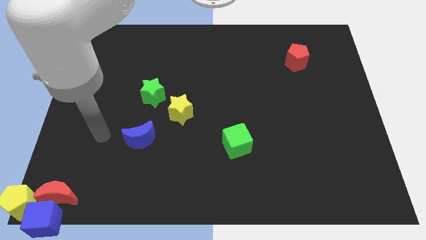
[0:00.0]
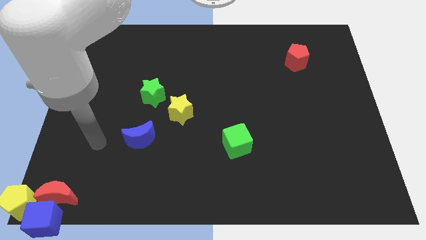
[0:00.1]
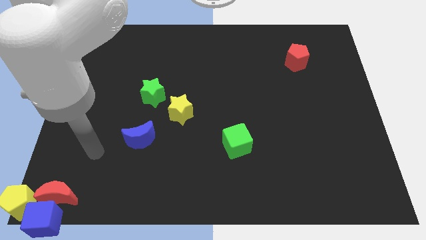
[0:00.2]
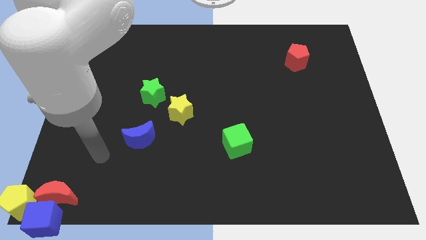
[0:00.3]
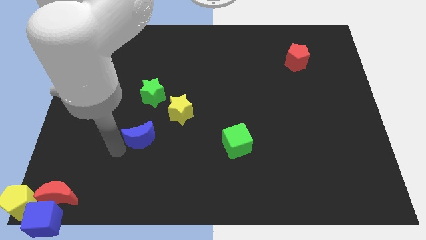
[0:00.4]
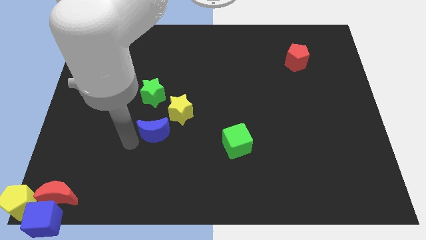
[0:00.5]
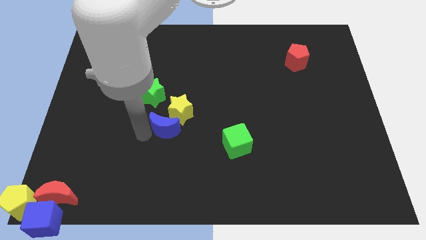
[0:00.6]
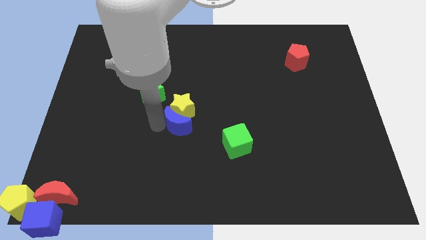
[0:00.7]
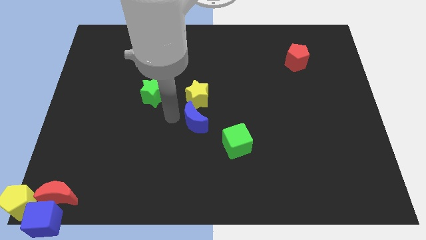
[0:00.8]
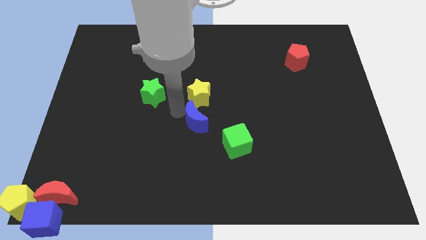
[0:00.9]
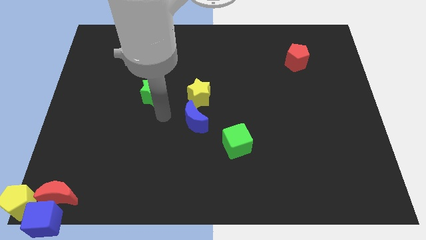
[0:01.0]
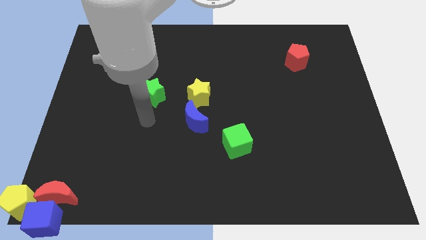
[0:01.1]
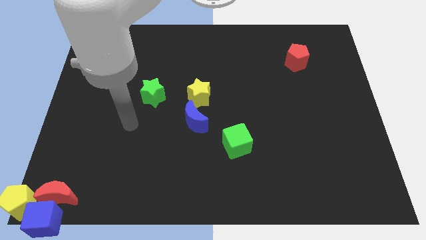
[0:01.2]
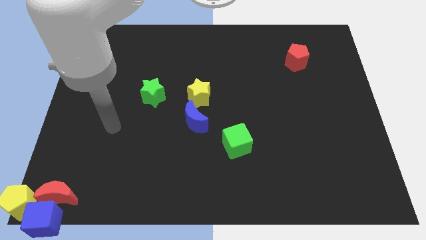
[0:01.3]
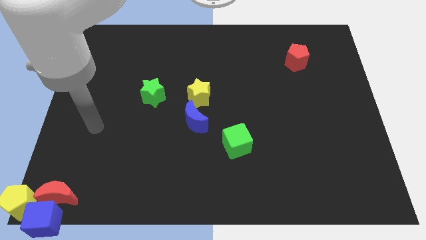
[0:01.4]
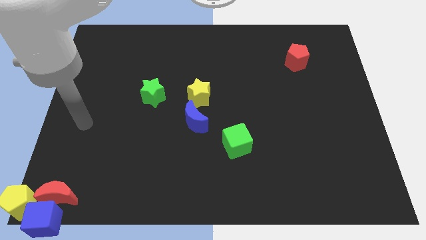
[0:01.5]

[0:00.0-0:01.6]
move blue crescent into the yellow star

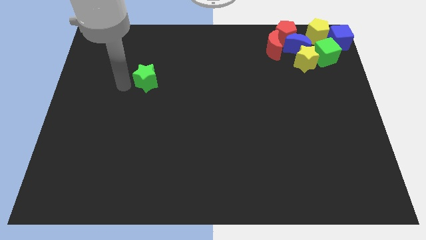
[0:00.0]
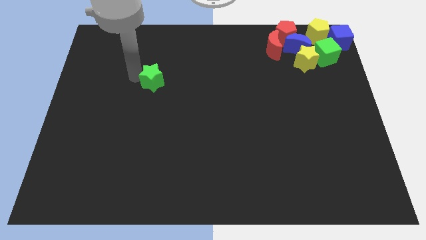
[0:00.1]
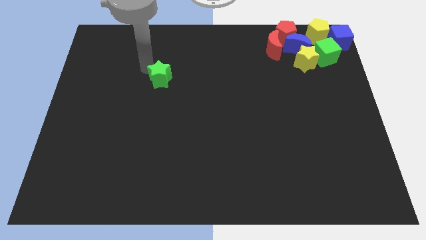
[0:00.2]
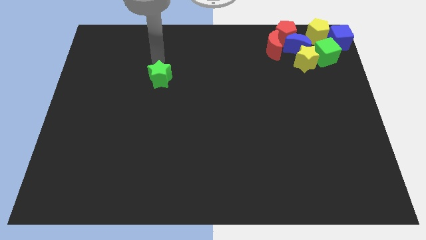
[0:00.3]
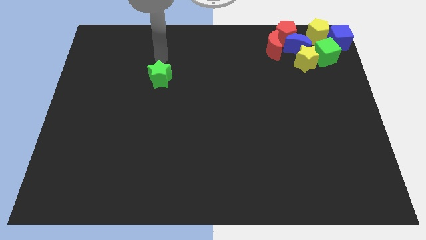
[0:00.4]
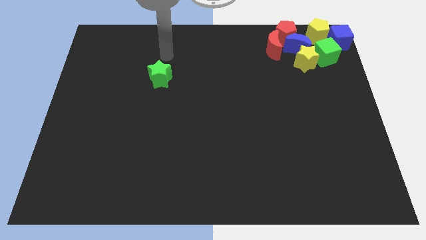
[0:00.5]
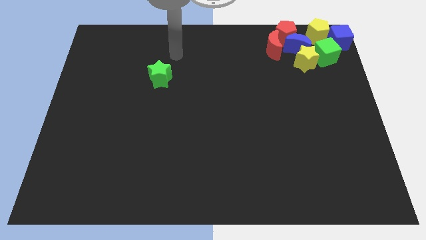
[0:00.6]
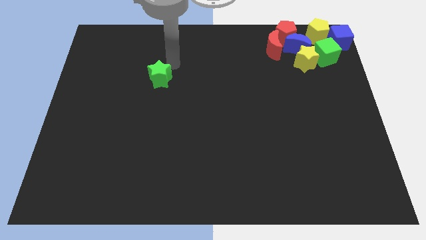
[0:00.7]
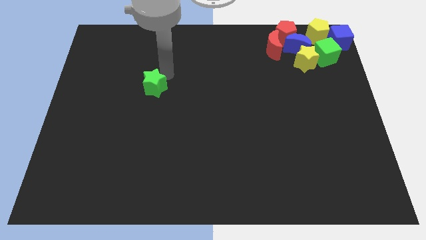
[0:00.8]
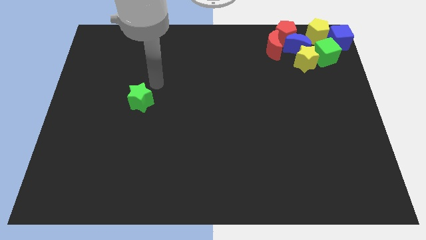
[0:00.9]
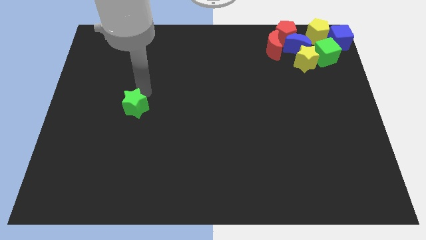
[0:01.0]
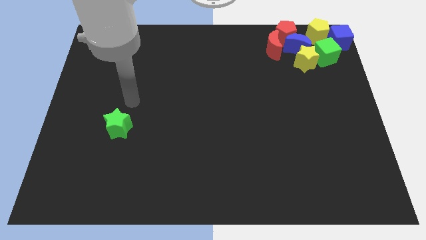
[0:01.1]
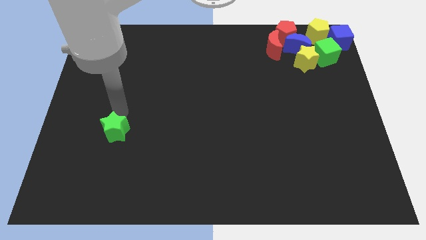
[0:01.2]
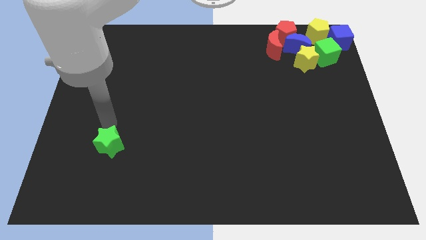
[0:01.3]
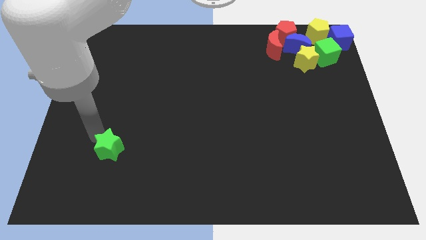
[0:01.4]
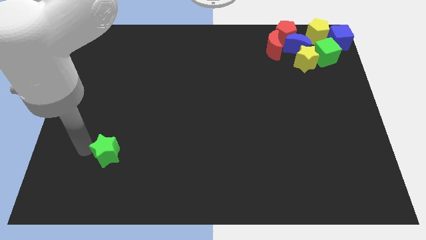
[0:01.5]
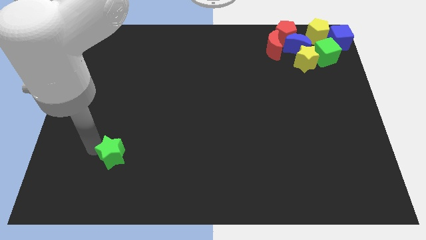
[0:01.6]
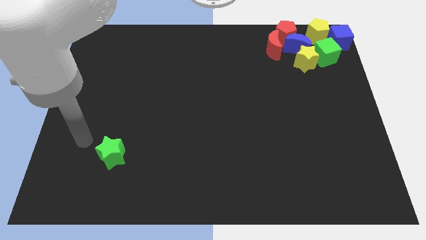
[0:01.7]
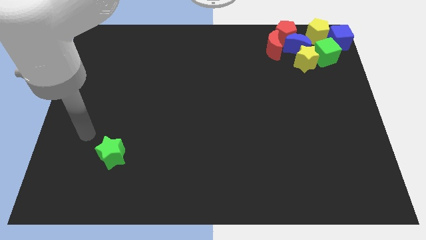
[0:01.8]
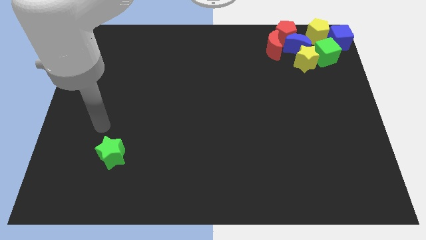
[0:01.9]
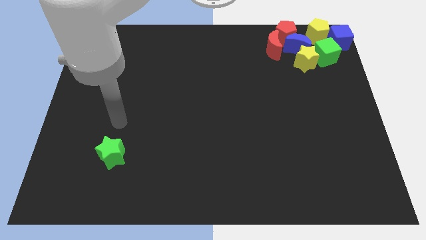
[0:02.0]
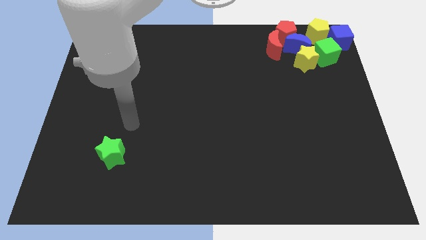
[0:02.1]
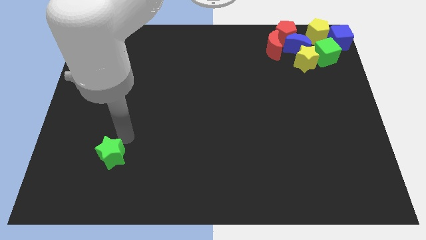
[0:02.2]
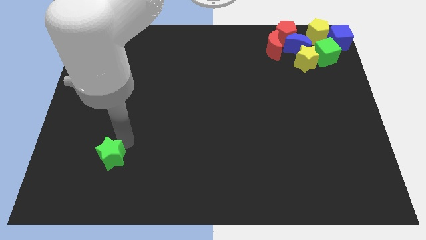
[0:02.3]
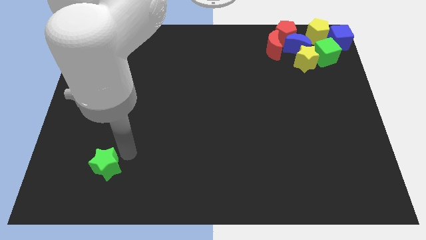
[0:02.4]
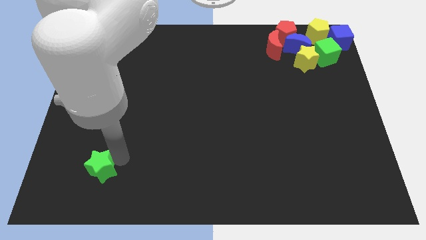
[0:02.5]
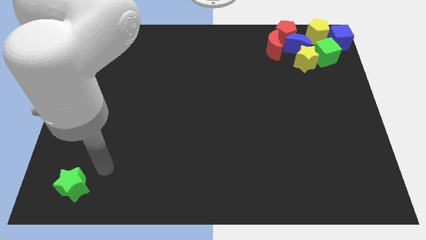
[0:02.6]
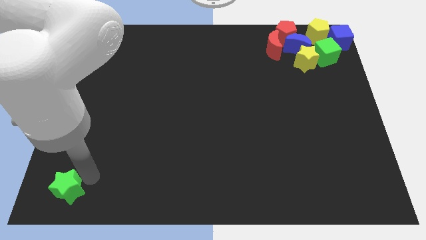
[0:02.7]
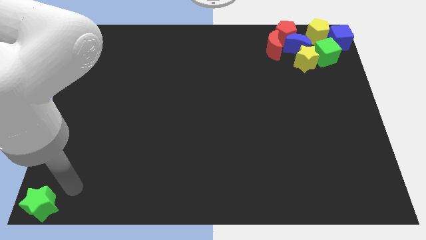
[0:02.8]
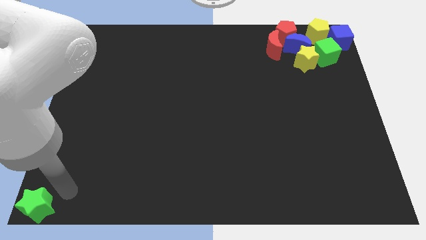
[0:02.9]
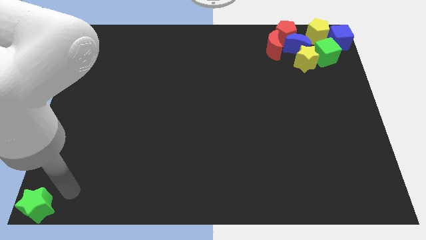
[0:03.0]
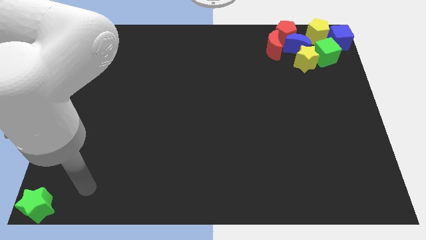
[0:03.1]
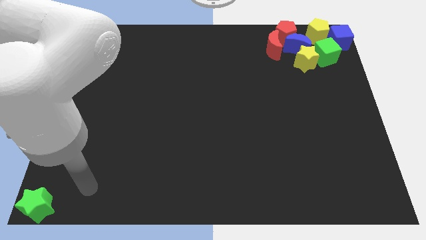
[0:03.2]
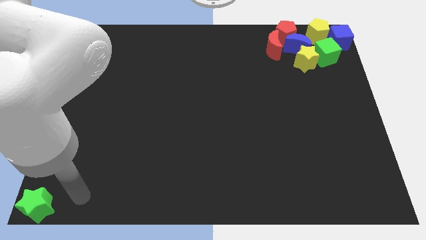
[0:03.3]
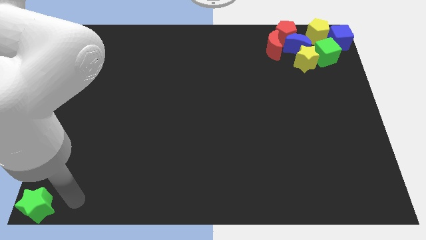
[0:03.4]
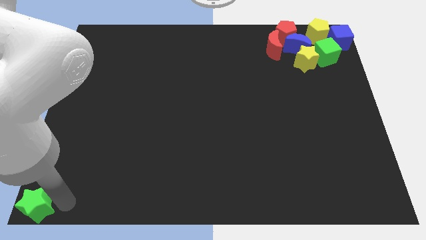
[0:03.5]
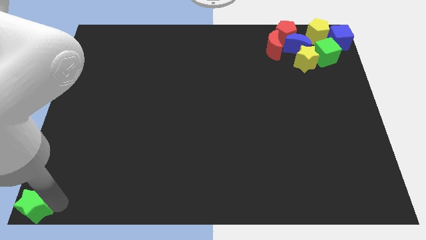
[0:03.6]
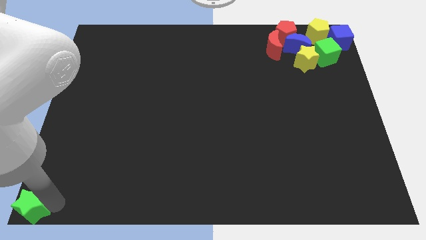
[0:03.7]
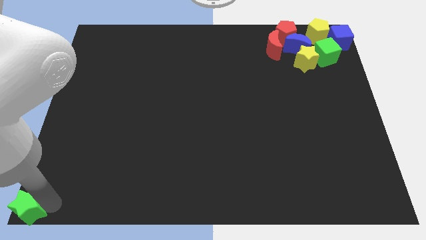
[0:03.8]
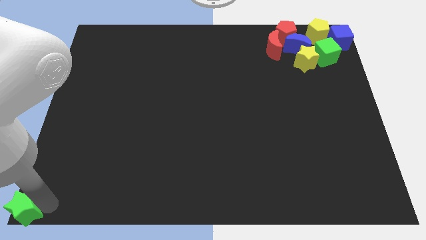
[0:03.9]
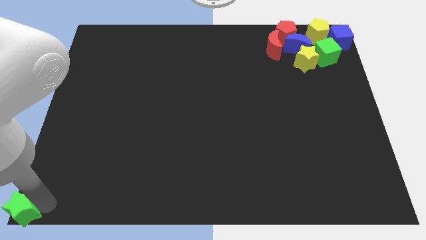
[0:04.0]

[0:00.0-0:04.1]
move the green star to the bottom left of the board

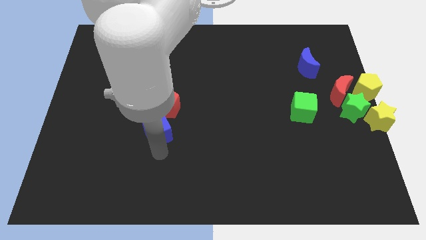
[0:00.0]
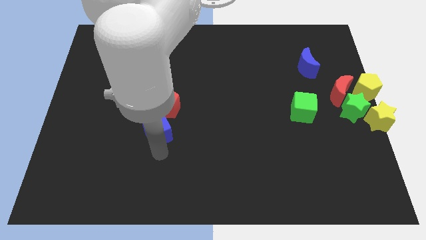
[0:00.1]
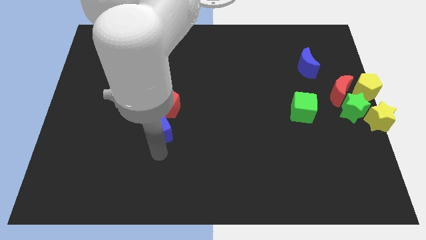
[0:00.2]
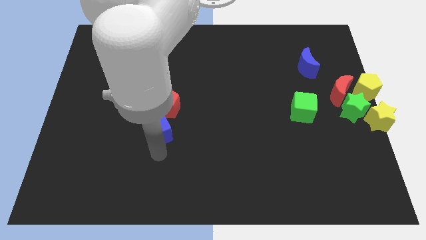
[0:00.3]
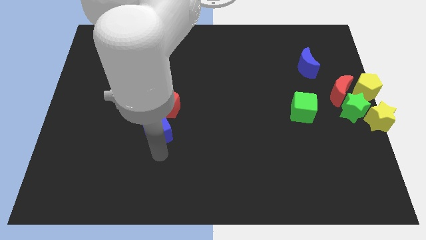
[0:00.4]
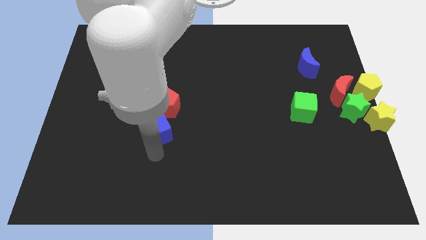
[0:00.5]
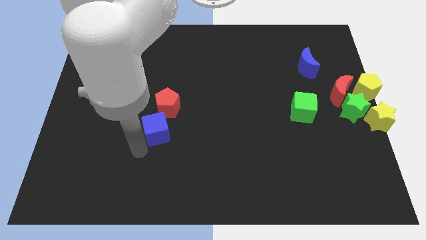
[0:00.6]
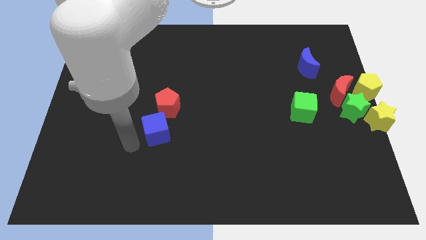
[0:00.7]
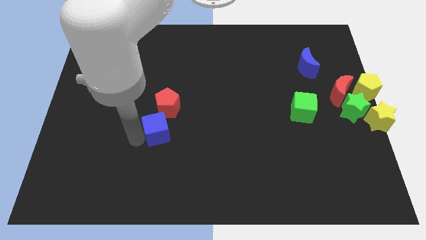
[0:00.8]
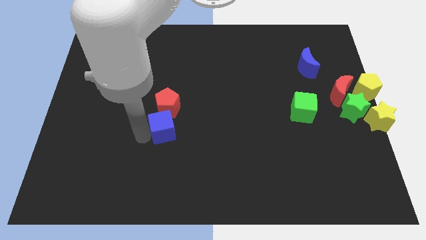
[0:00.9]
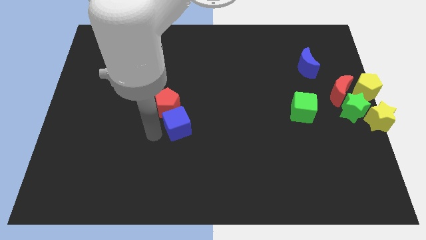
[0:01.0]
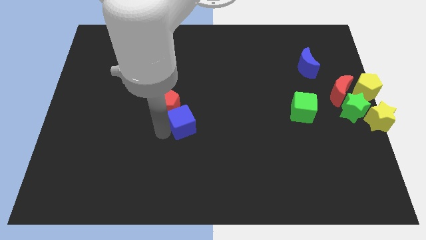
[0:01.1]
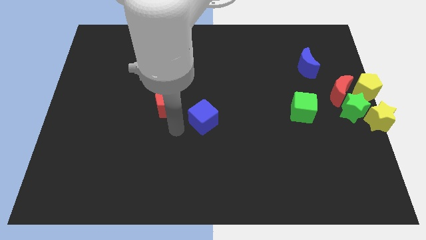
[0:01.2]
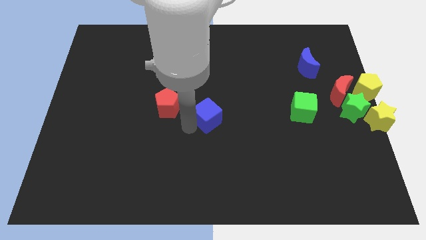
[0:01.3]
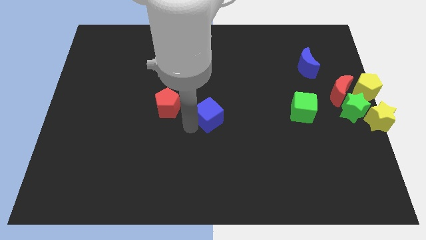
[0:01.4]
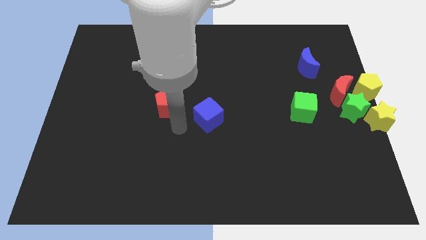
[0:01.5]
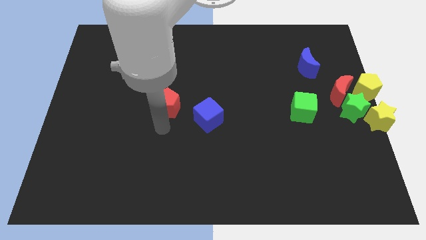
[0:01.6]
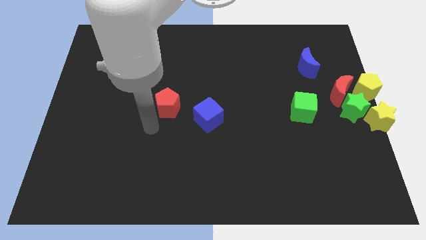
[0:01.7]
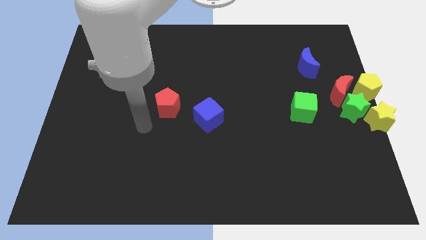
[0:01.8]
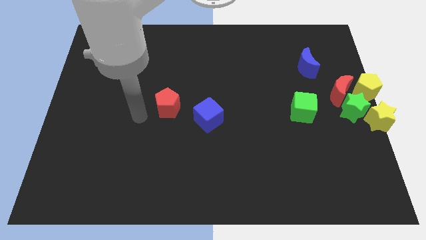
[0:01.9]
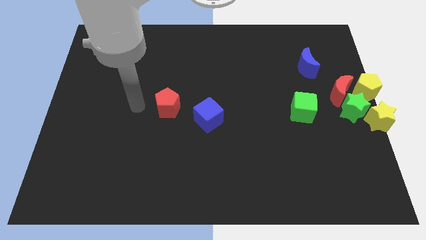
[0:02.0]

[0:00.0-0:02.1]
move the blue cube to the center

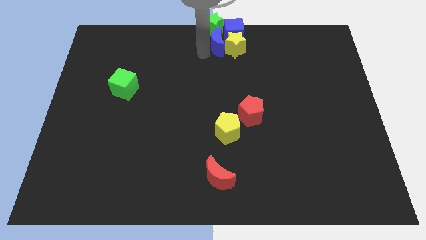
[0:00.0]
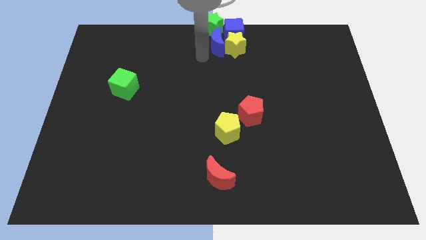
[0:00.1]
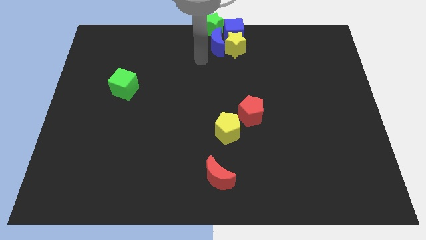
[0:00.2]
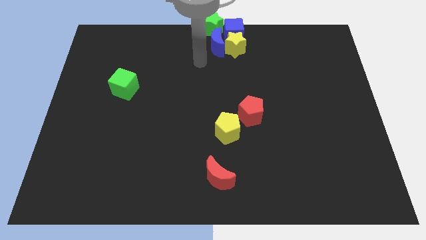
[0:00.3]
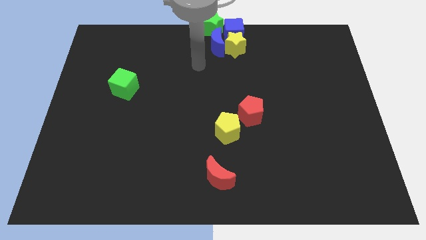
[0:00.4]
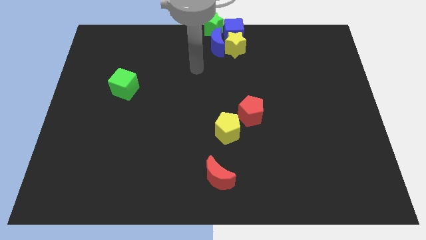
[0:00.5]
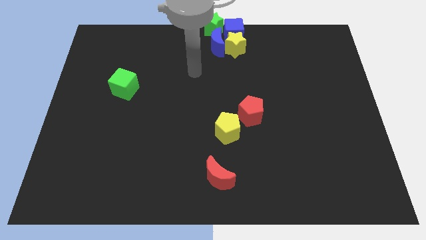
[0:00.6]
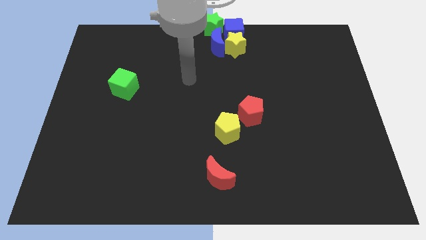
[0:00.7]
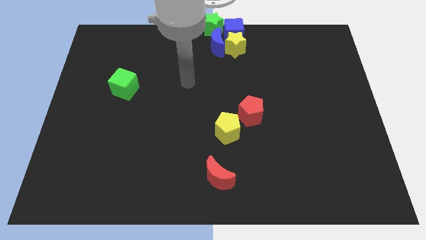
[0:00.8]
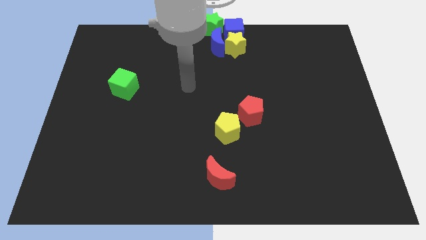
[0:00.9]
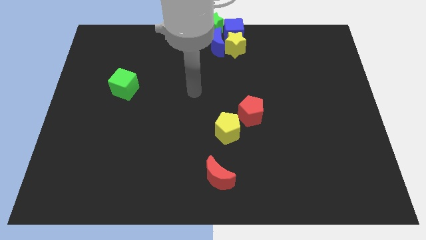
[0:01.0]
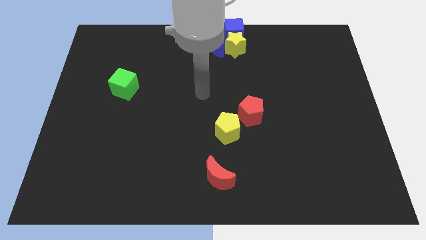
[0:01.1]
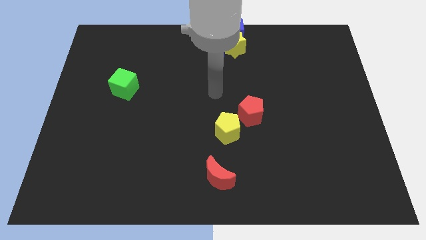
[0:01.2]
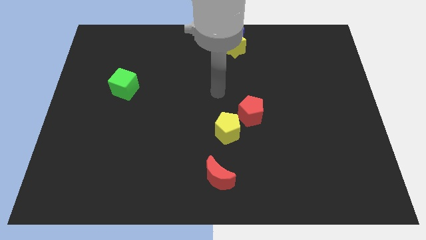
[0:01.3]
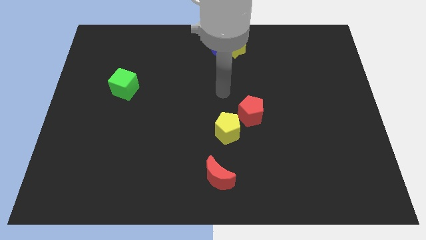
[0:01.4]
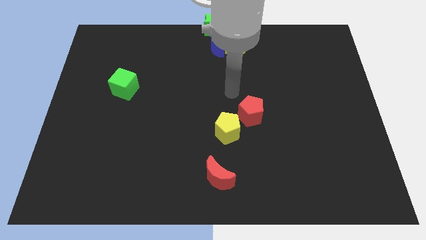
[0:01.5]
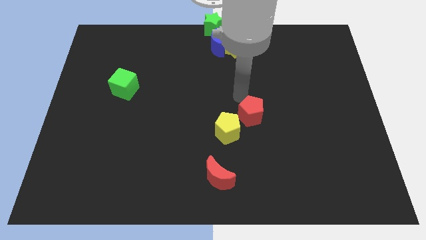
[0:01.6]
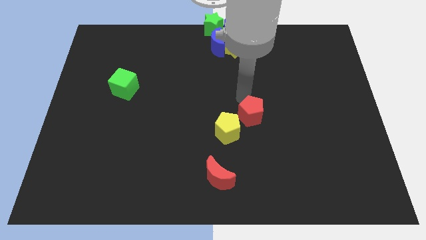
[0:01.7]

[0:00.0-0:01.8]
place the arm above the red pentagon
